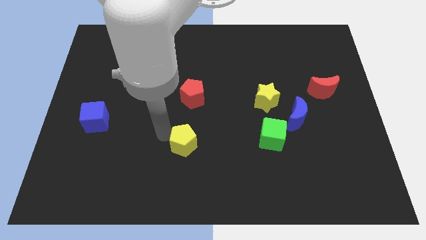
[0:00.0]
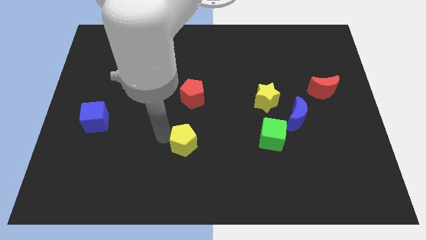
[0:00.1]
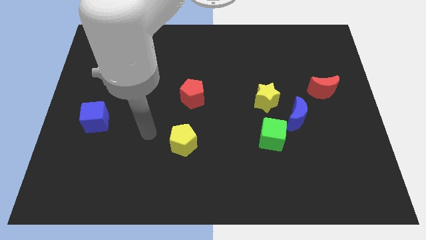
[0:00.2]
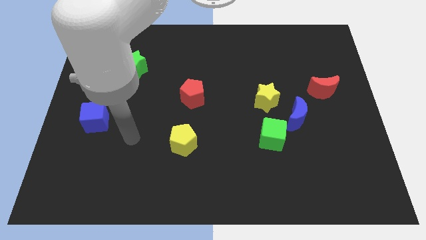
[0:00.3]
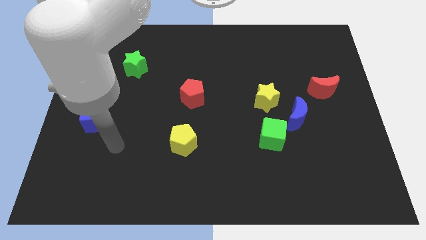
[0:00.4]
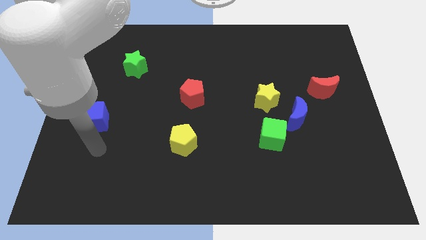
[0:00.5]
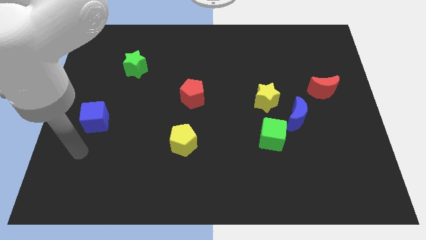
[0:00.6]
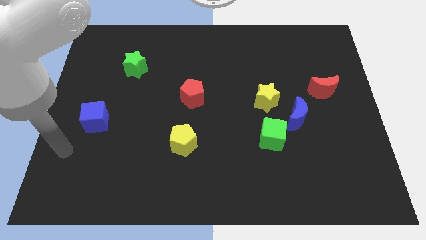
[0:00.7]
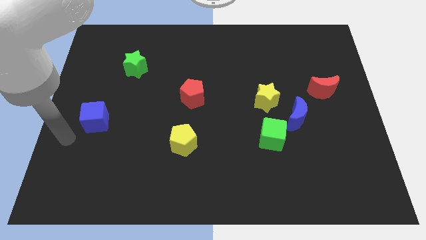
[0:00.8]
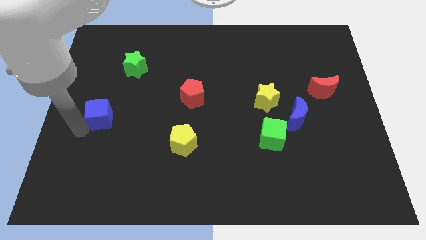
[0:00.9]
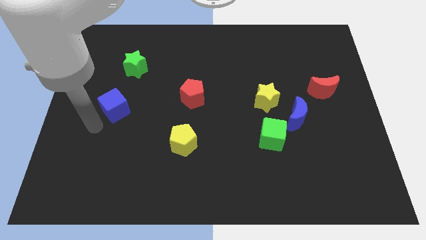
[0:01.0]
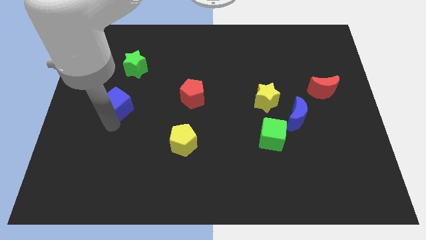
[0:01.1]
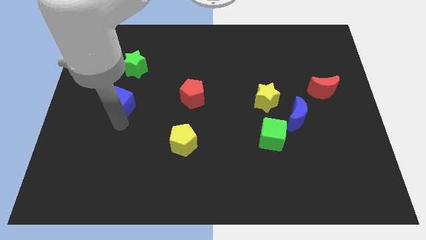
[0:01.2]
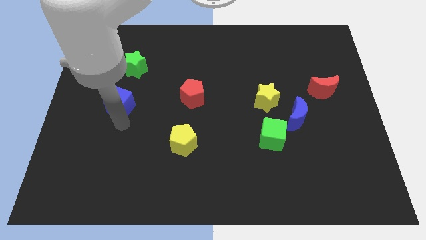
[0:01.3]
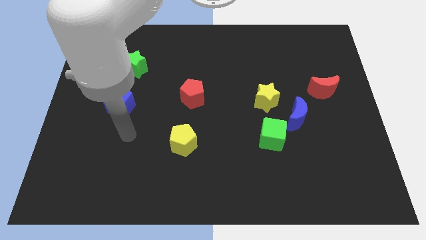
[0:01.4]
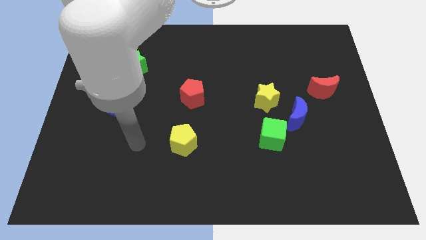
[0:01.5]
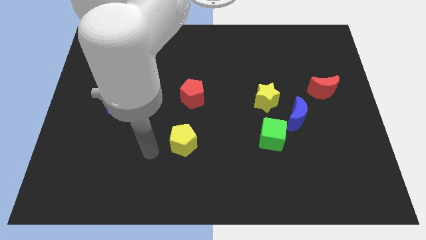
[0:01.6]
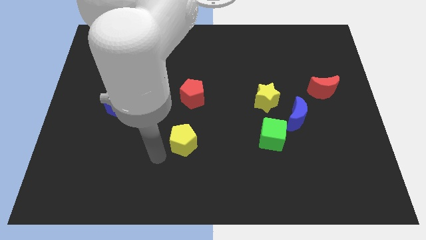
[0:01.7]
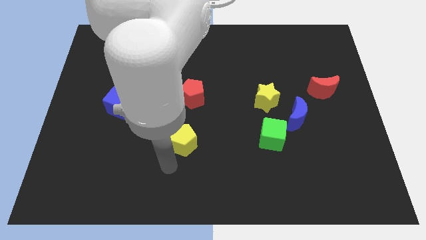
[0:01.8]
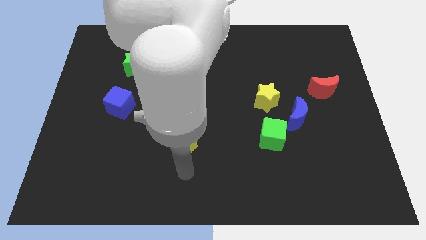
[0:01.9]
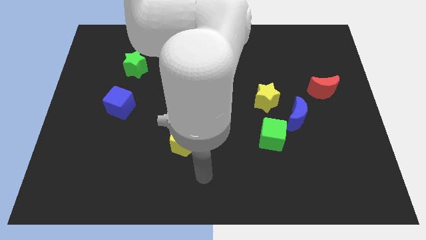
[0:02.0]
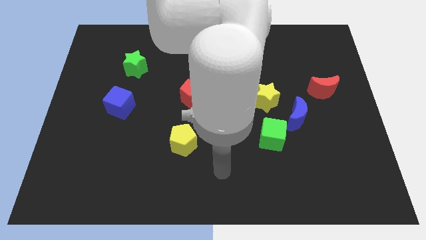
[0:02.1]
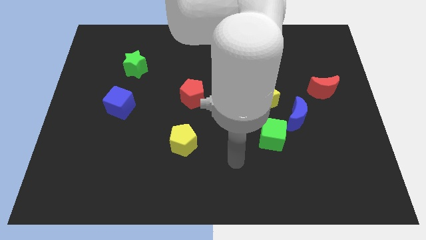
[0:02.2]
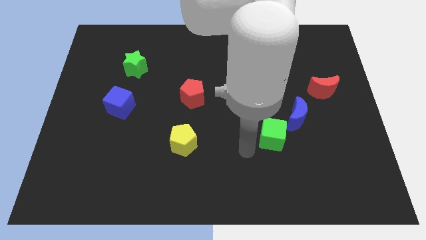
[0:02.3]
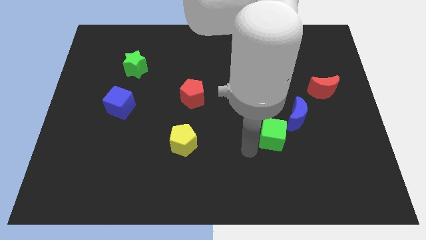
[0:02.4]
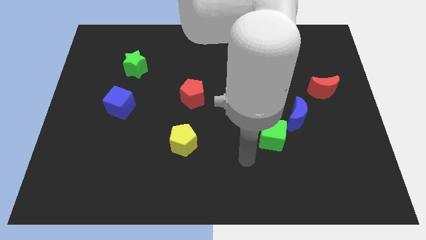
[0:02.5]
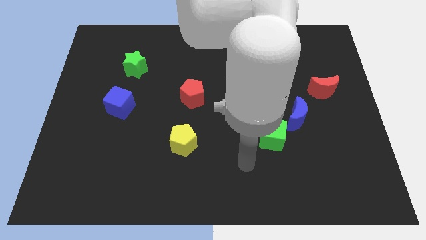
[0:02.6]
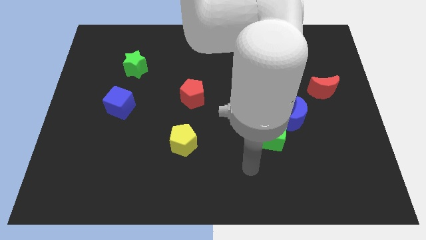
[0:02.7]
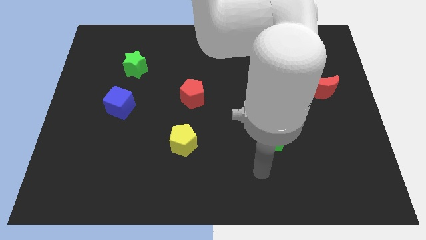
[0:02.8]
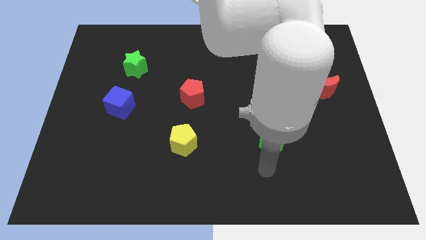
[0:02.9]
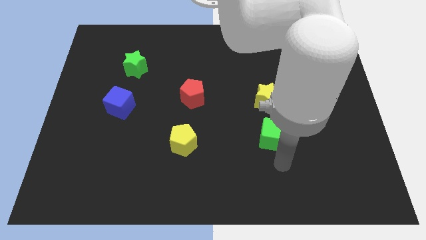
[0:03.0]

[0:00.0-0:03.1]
slightly push the blue cube towards the center of the board and move away

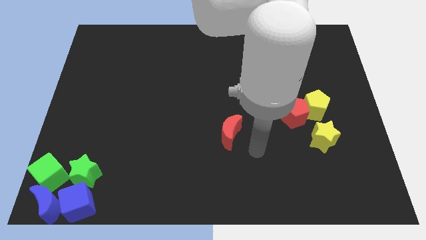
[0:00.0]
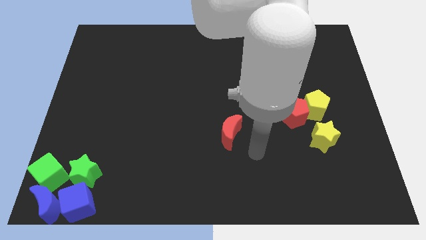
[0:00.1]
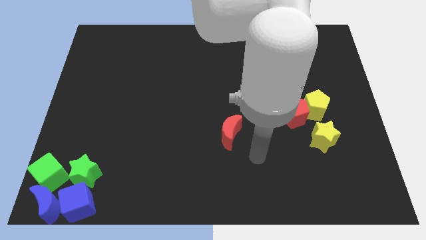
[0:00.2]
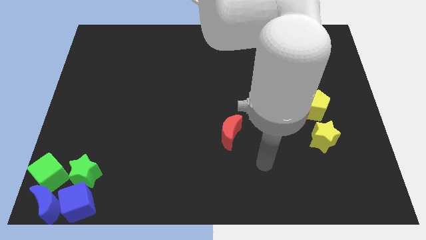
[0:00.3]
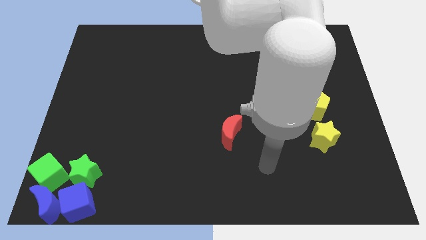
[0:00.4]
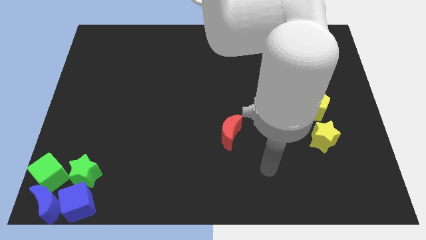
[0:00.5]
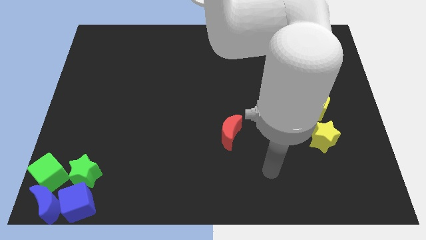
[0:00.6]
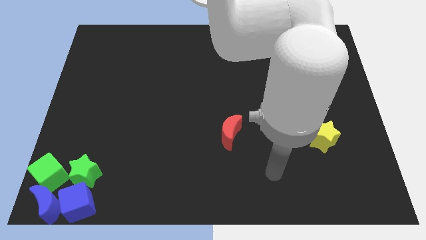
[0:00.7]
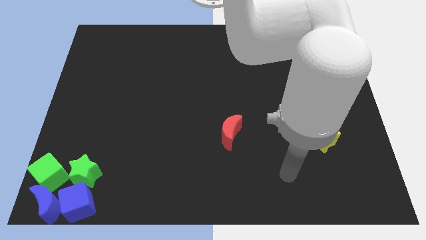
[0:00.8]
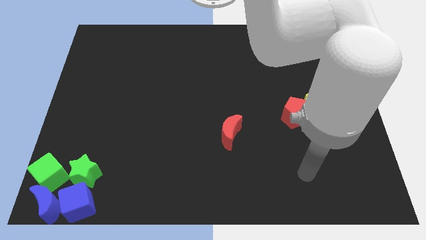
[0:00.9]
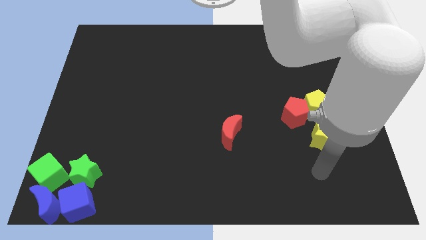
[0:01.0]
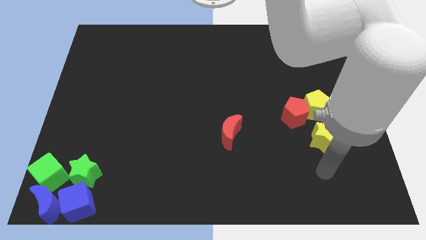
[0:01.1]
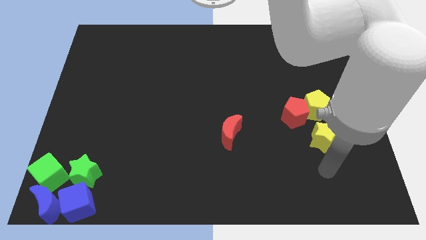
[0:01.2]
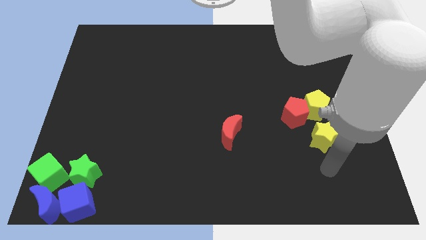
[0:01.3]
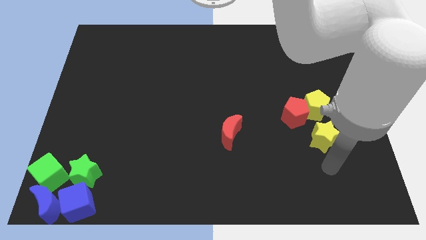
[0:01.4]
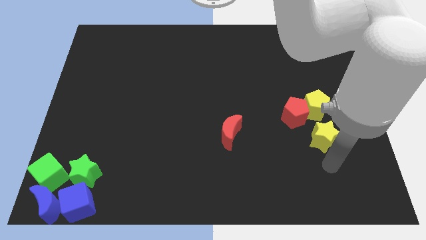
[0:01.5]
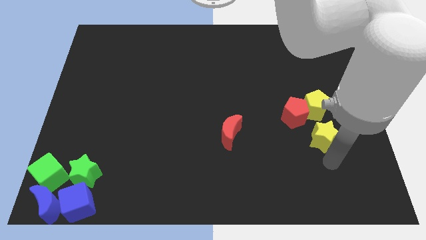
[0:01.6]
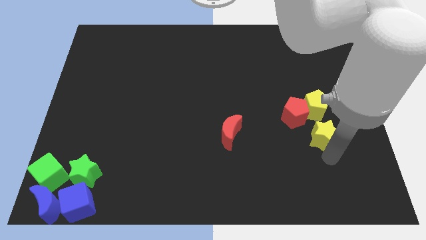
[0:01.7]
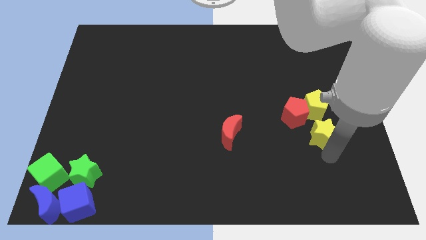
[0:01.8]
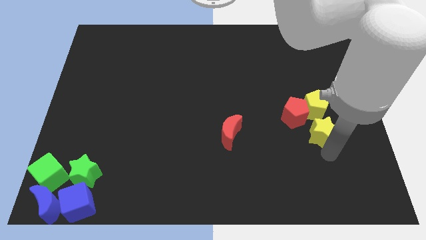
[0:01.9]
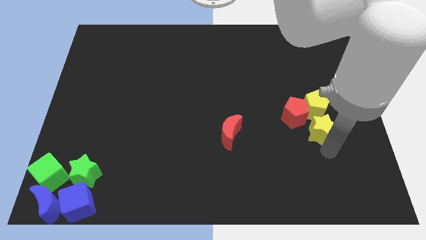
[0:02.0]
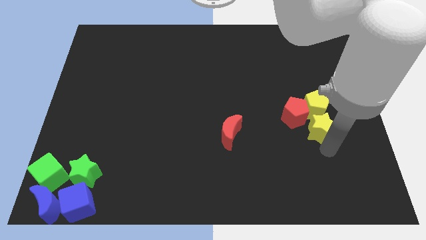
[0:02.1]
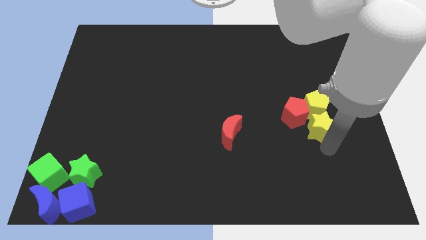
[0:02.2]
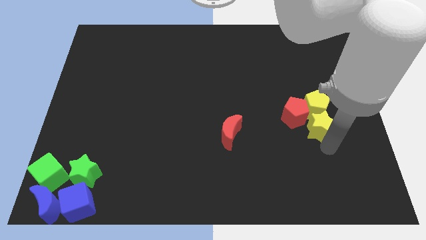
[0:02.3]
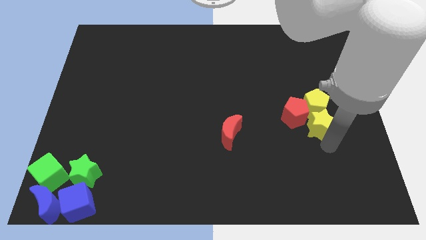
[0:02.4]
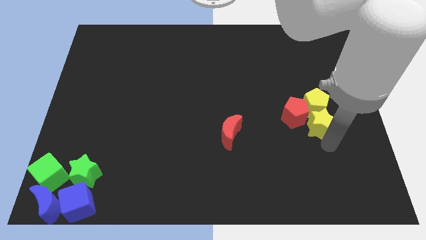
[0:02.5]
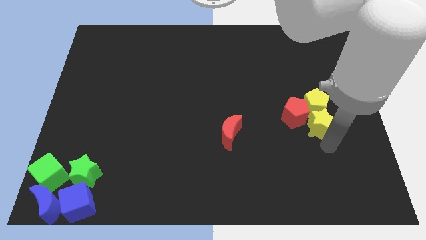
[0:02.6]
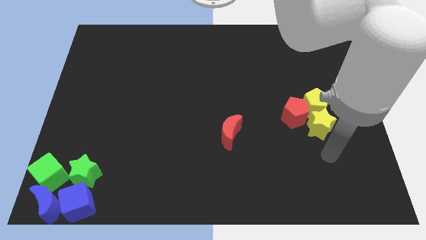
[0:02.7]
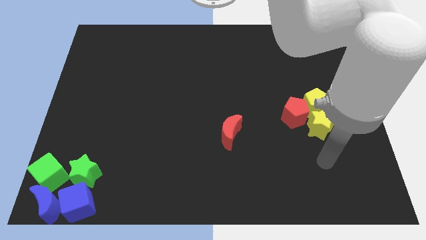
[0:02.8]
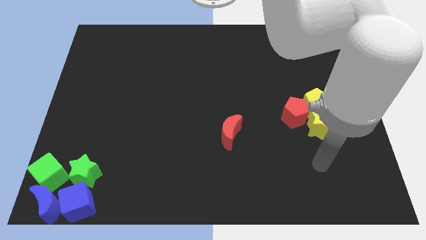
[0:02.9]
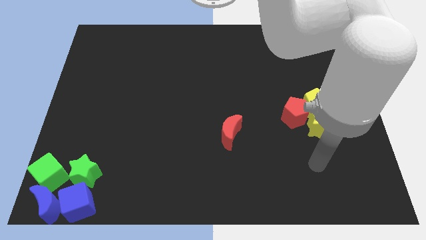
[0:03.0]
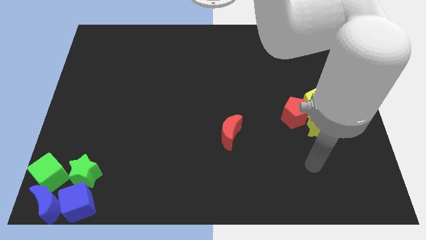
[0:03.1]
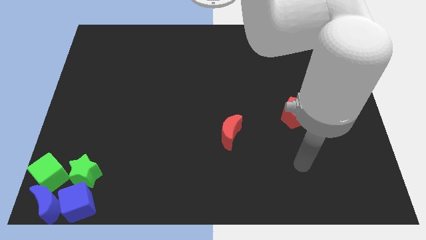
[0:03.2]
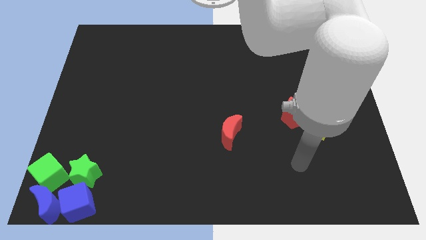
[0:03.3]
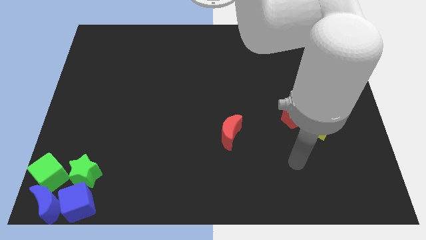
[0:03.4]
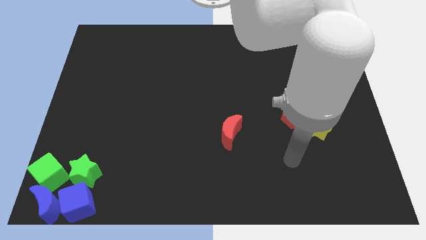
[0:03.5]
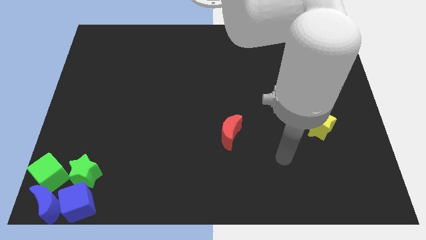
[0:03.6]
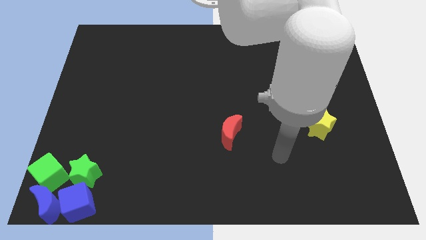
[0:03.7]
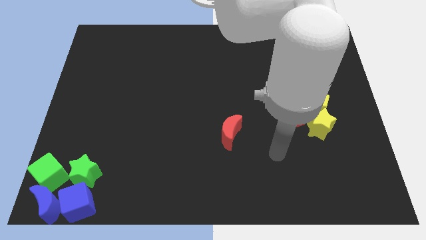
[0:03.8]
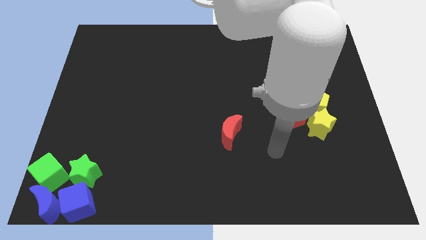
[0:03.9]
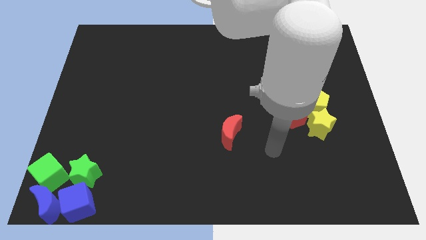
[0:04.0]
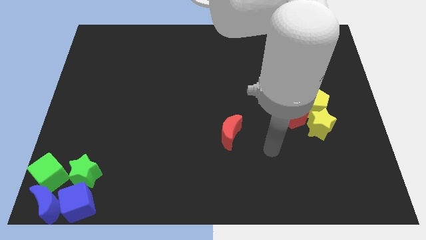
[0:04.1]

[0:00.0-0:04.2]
push yellow star into yellow pentagon

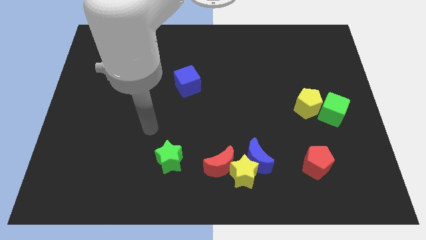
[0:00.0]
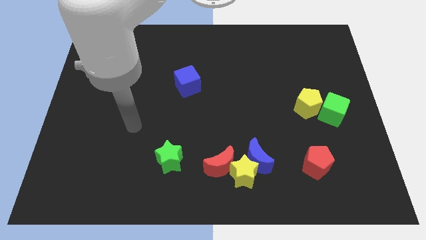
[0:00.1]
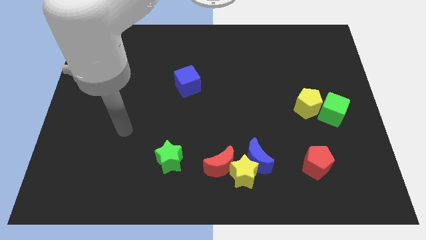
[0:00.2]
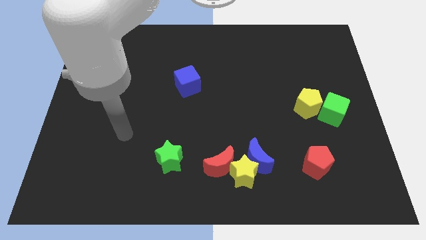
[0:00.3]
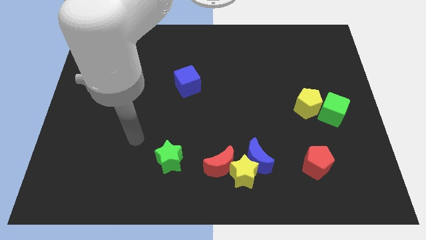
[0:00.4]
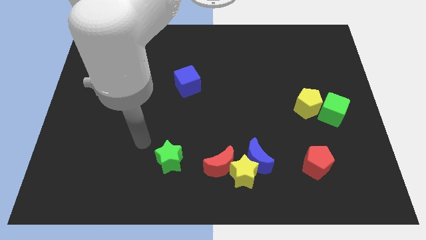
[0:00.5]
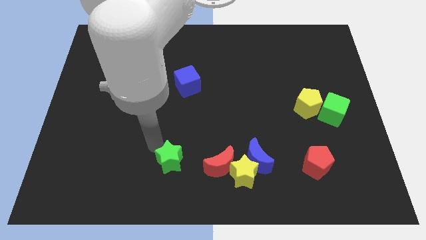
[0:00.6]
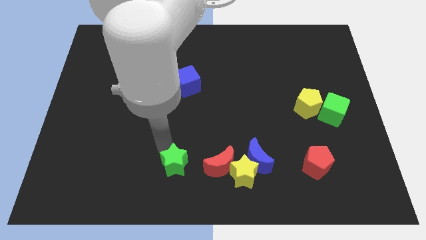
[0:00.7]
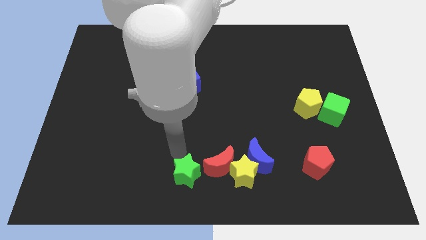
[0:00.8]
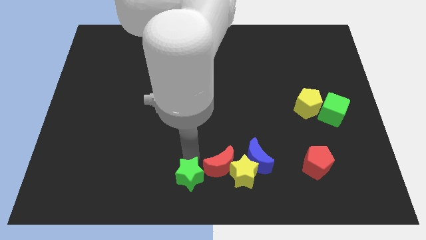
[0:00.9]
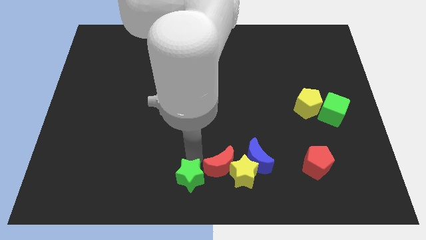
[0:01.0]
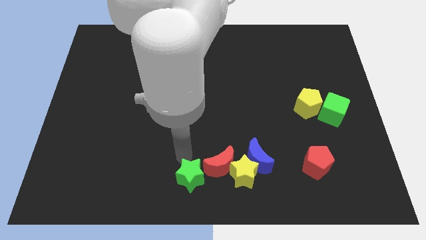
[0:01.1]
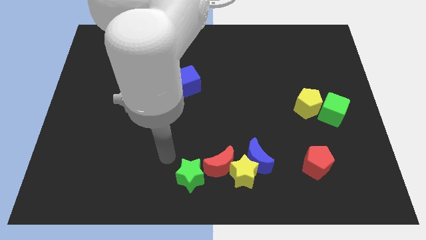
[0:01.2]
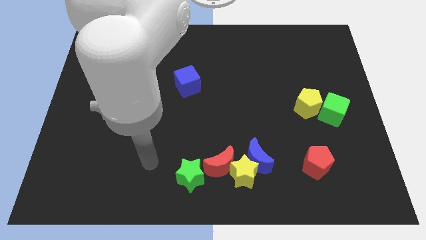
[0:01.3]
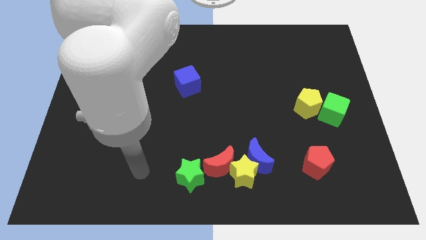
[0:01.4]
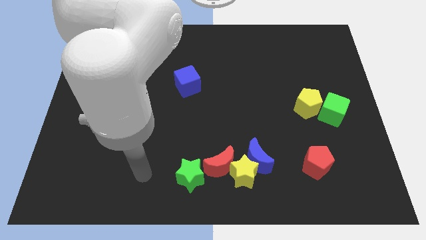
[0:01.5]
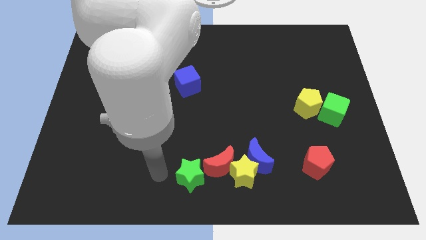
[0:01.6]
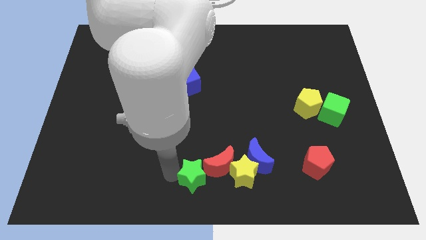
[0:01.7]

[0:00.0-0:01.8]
place the green star to the left of red moon
